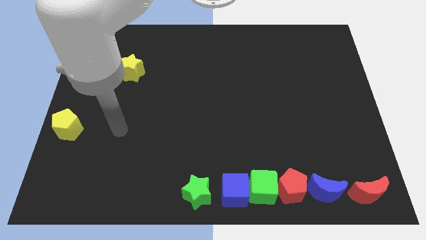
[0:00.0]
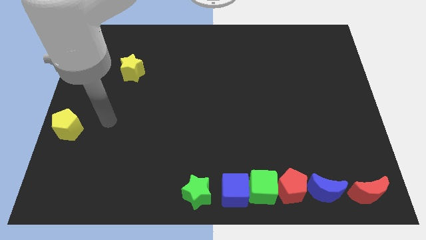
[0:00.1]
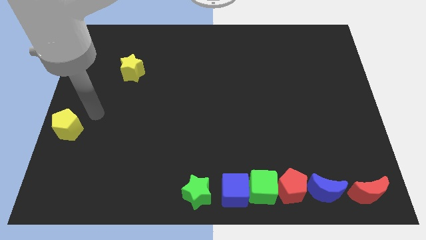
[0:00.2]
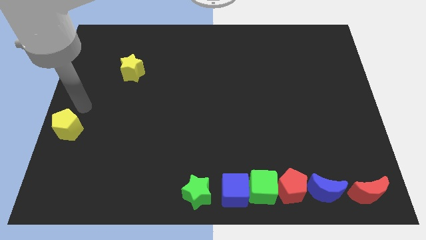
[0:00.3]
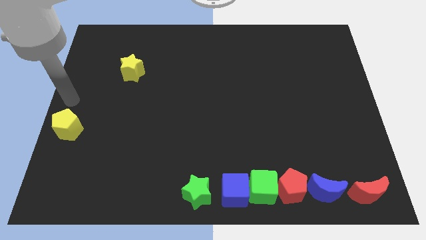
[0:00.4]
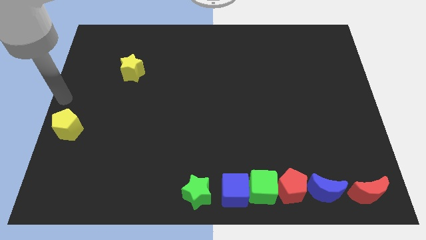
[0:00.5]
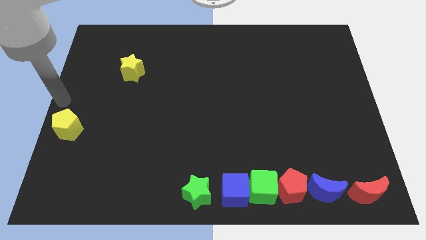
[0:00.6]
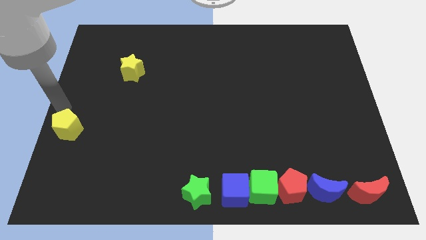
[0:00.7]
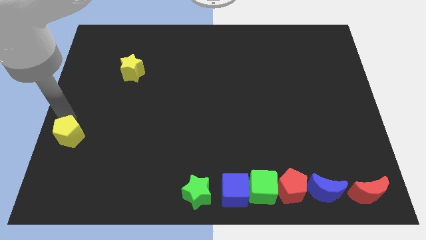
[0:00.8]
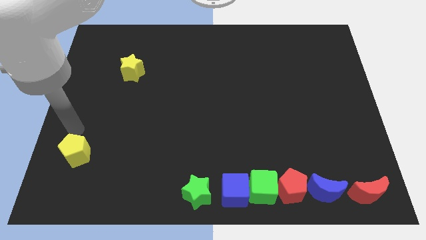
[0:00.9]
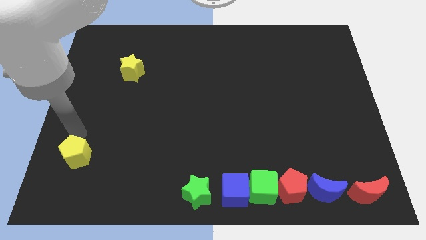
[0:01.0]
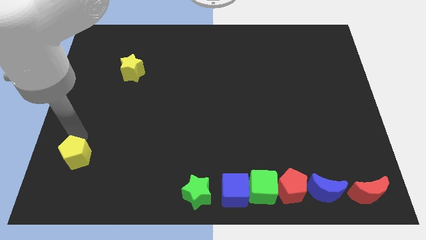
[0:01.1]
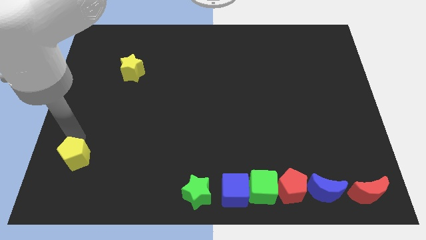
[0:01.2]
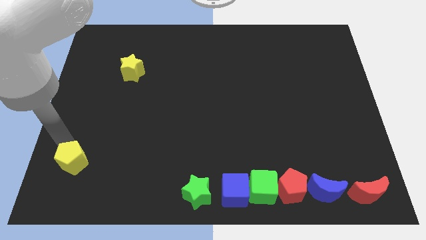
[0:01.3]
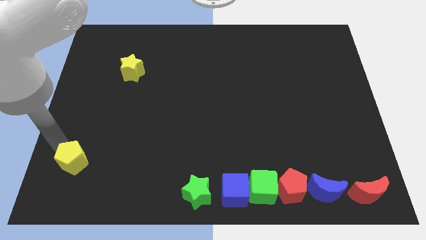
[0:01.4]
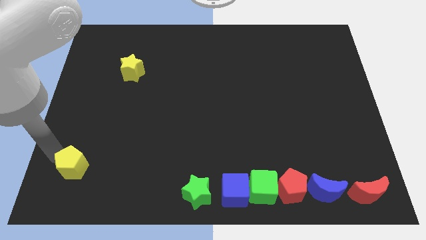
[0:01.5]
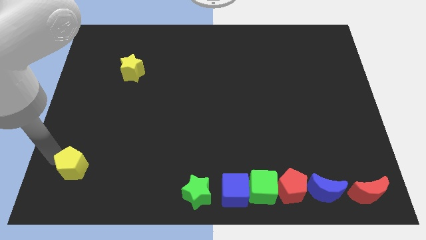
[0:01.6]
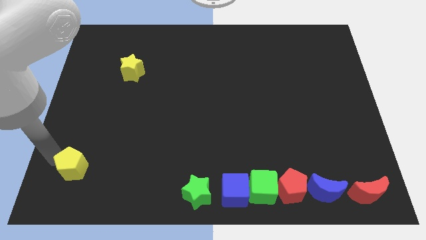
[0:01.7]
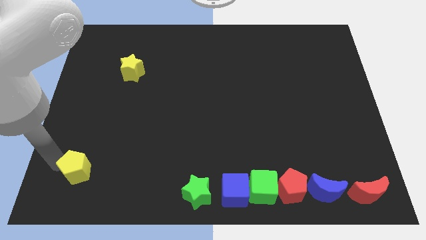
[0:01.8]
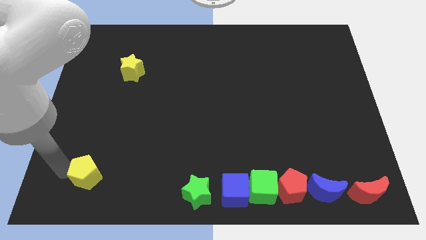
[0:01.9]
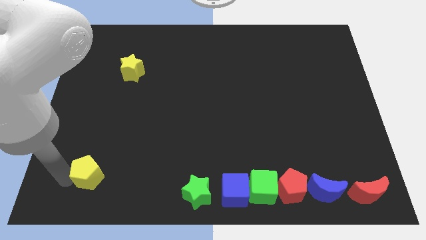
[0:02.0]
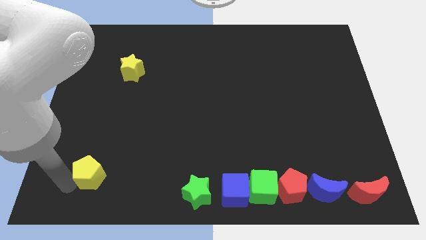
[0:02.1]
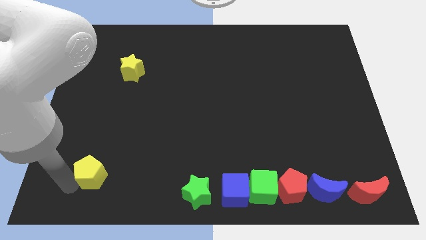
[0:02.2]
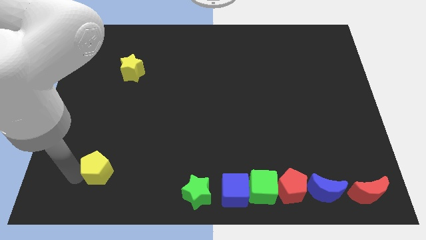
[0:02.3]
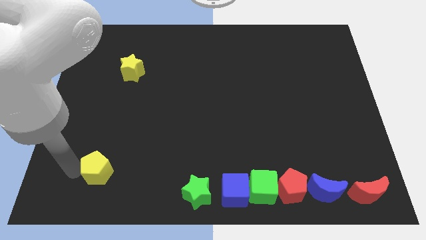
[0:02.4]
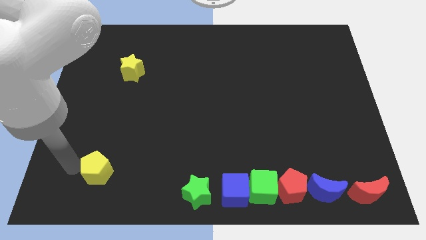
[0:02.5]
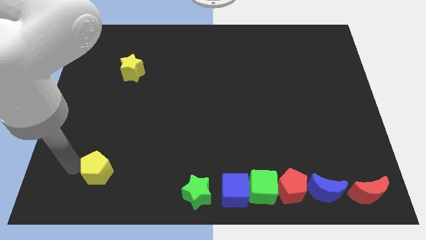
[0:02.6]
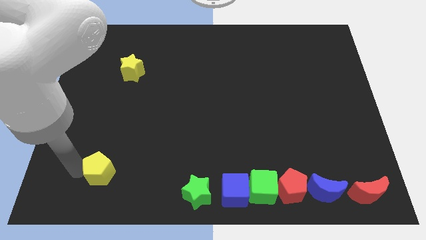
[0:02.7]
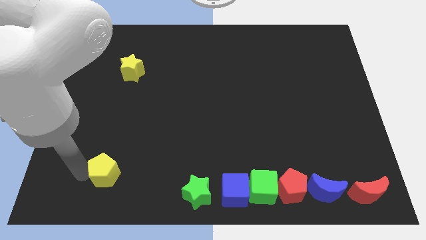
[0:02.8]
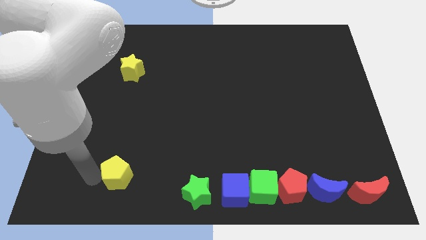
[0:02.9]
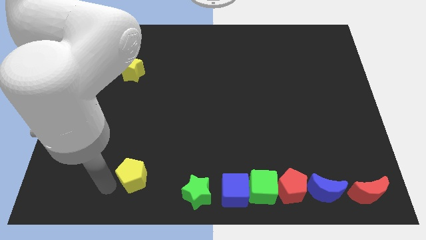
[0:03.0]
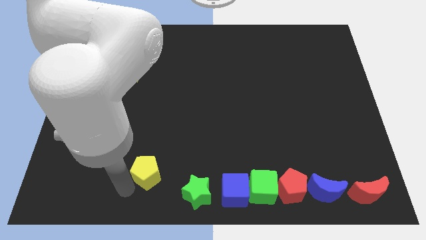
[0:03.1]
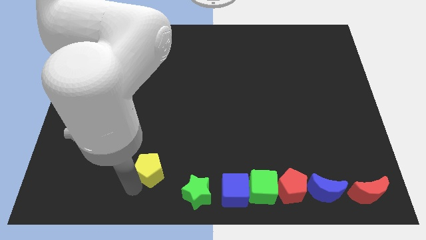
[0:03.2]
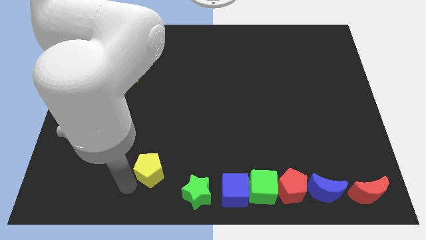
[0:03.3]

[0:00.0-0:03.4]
push the yellow pentagon towards the green star

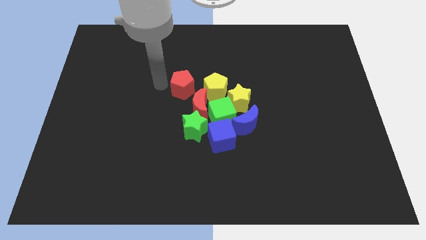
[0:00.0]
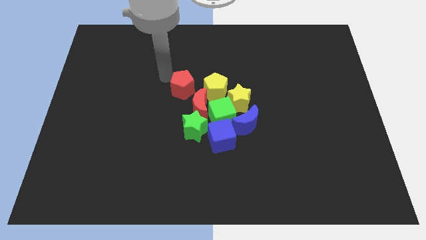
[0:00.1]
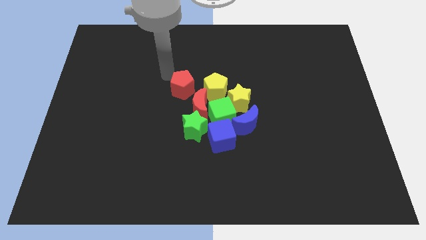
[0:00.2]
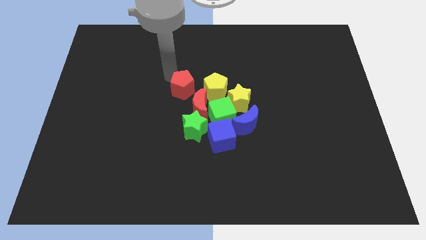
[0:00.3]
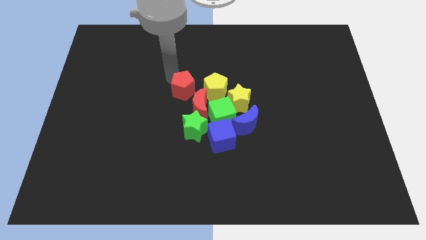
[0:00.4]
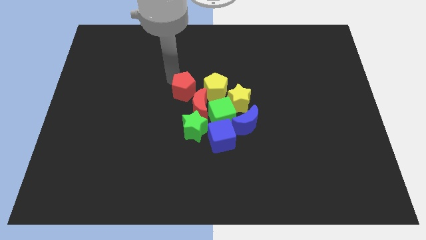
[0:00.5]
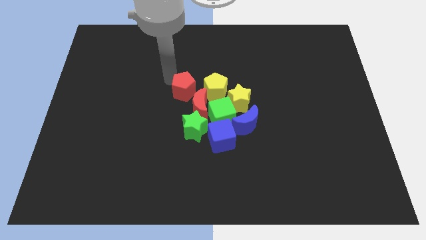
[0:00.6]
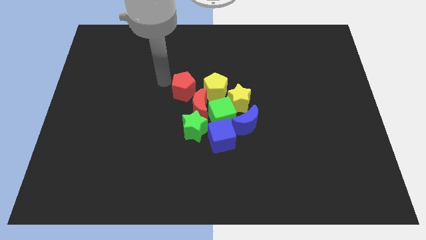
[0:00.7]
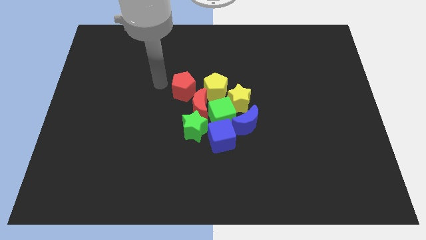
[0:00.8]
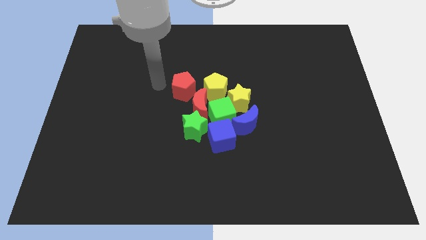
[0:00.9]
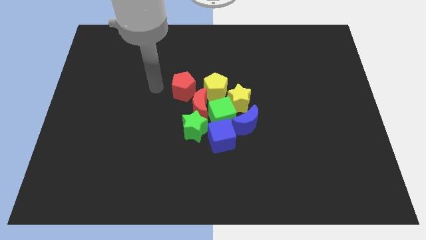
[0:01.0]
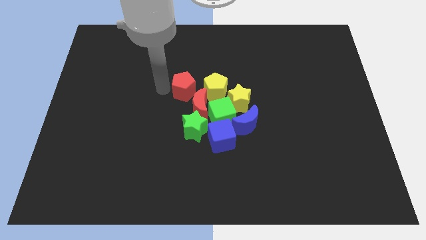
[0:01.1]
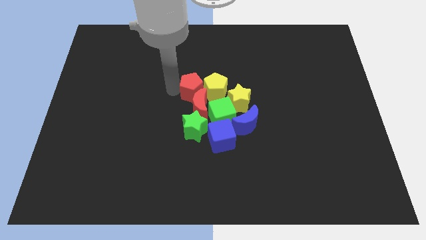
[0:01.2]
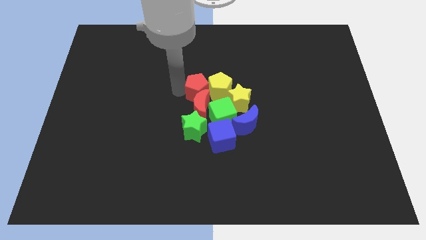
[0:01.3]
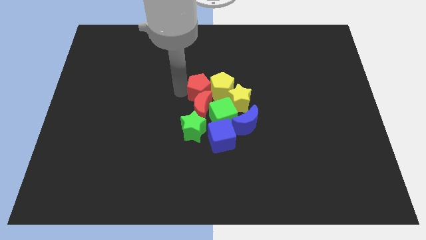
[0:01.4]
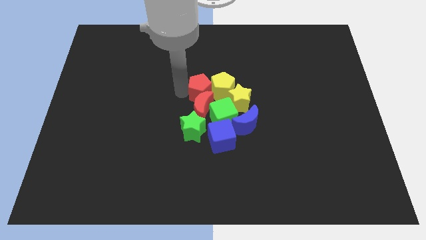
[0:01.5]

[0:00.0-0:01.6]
drag the red pentagon into the red moon and yellow pentagon

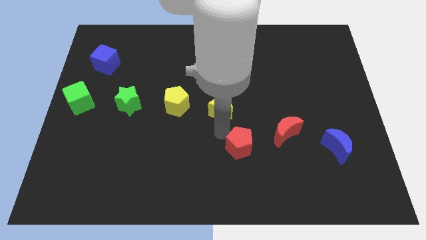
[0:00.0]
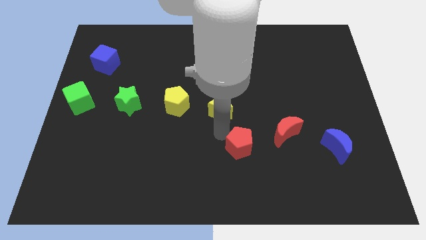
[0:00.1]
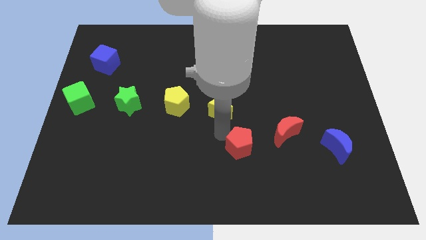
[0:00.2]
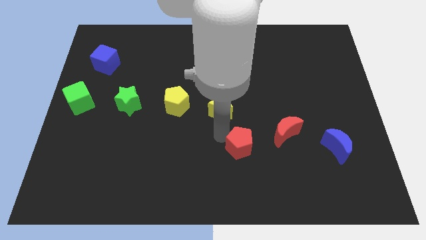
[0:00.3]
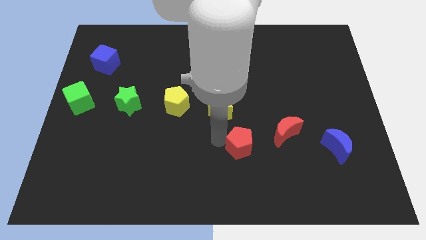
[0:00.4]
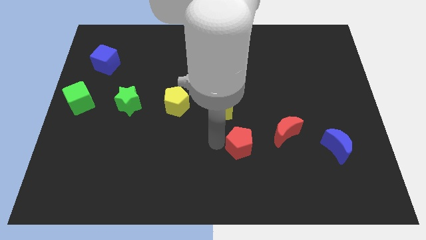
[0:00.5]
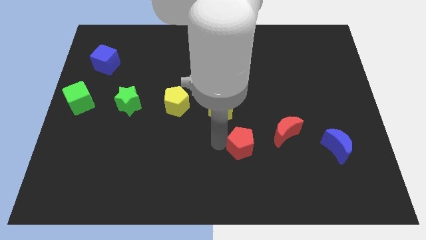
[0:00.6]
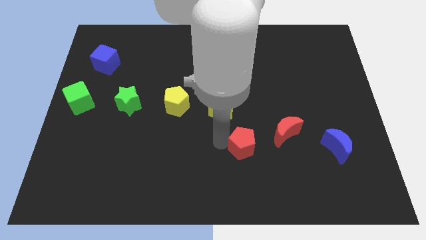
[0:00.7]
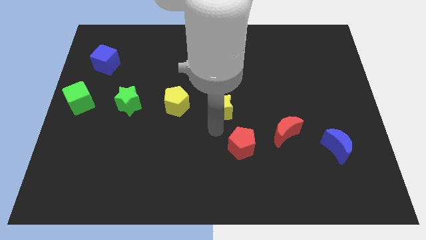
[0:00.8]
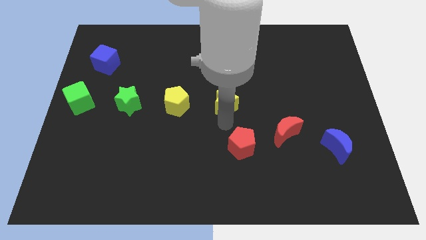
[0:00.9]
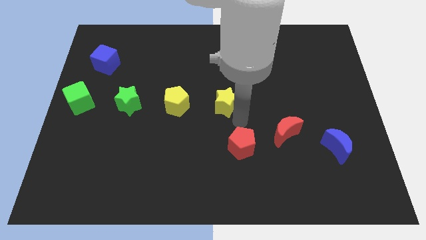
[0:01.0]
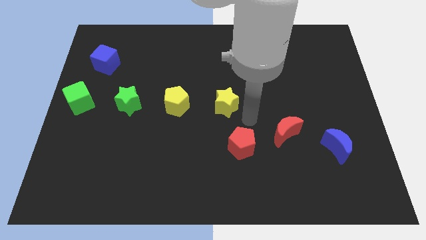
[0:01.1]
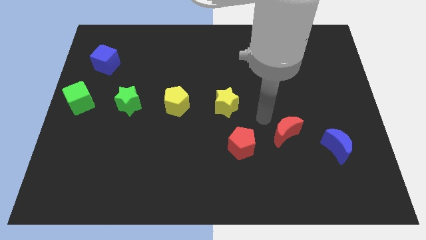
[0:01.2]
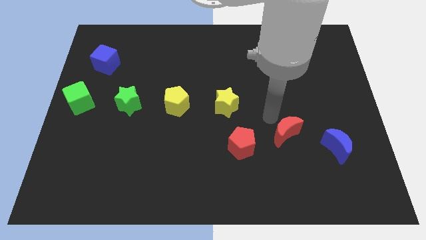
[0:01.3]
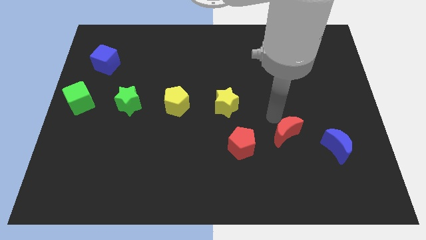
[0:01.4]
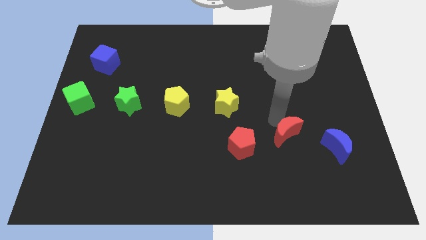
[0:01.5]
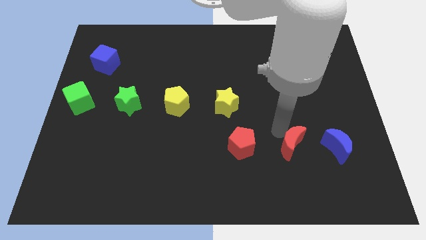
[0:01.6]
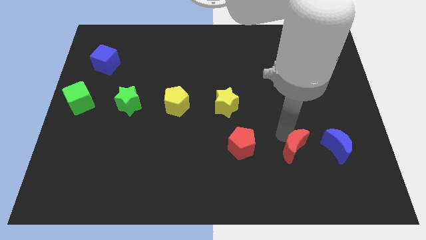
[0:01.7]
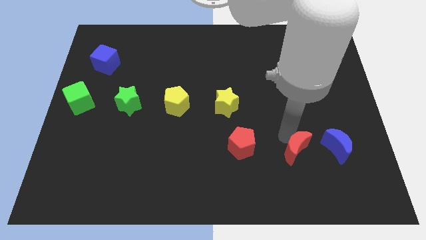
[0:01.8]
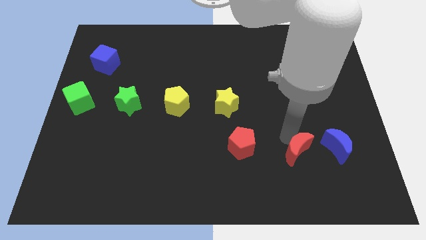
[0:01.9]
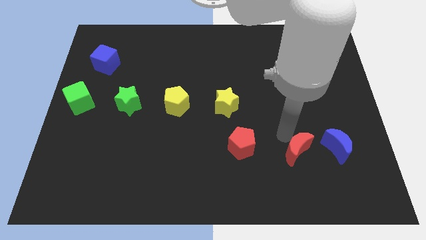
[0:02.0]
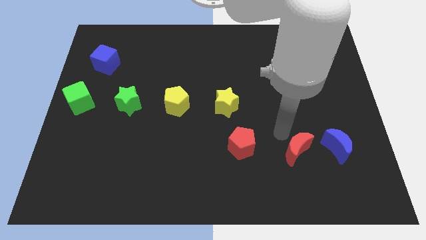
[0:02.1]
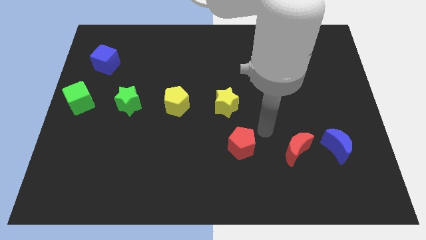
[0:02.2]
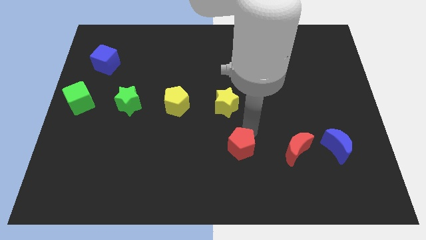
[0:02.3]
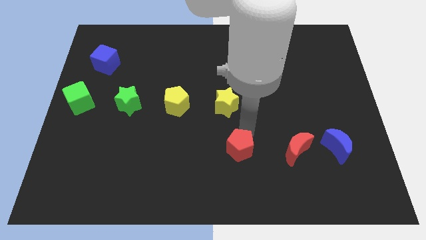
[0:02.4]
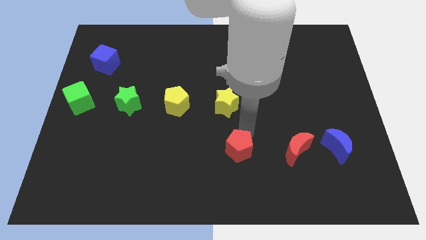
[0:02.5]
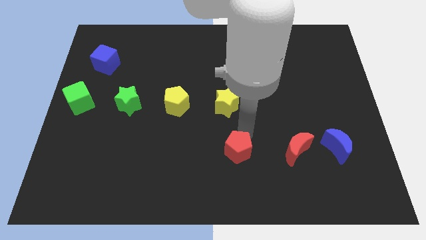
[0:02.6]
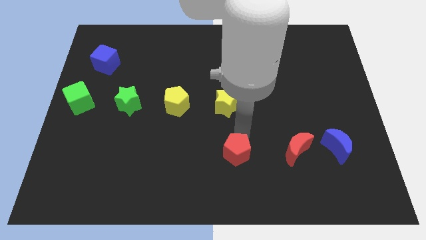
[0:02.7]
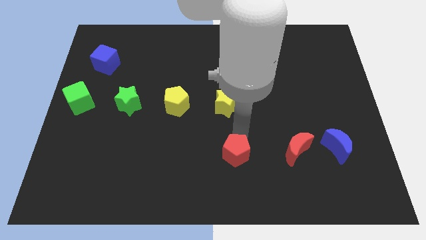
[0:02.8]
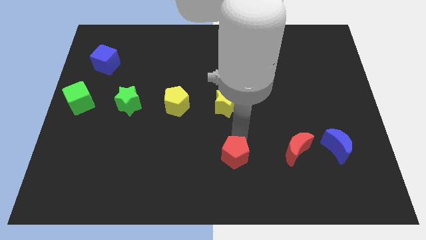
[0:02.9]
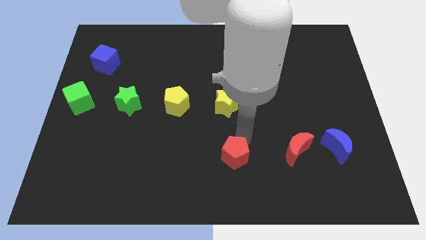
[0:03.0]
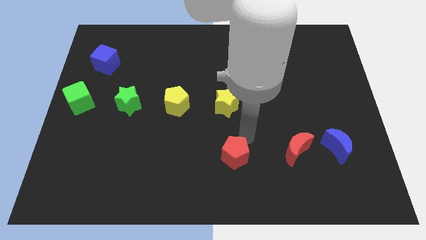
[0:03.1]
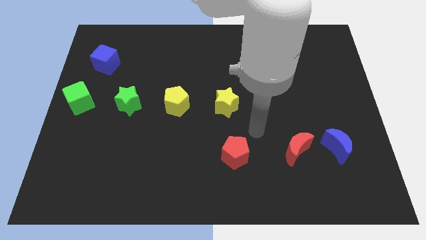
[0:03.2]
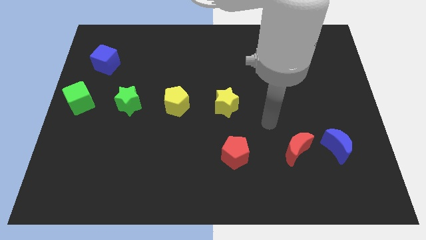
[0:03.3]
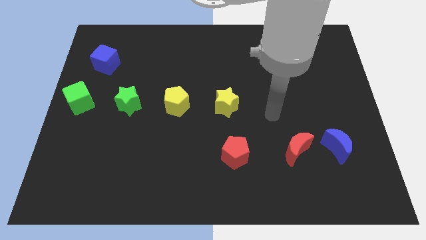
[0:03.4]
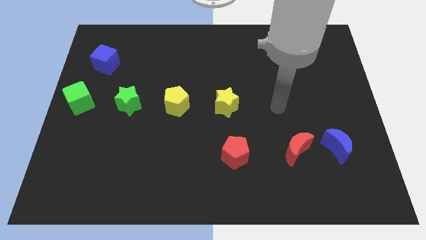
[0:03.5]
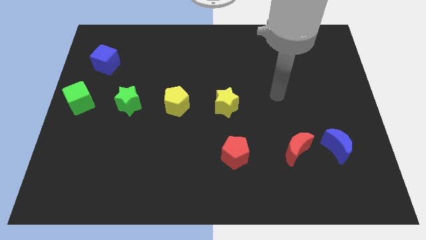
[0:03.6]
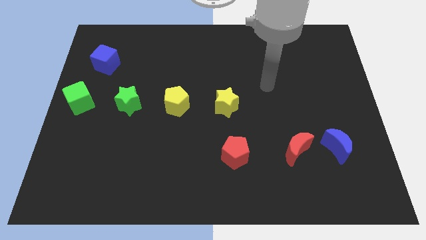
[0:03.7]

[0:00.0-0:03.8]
adjust the red pentagon and the red moon to form a horizontal line
